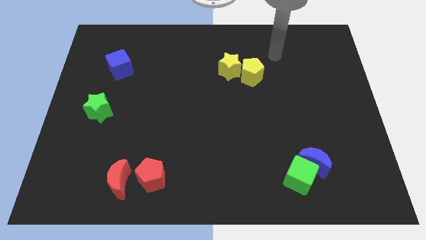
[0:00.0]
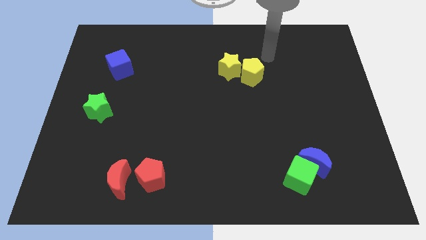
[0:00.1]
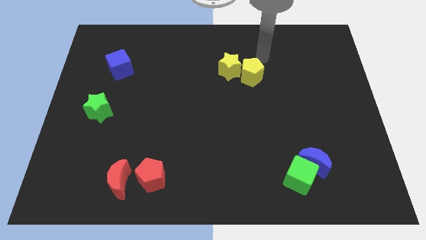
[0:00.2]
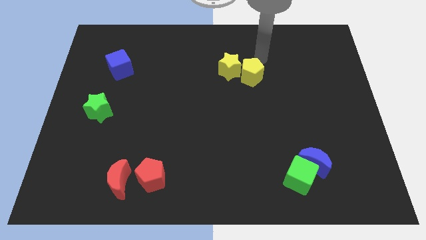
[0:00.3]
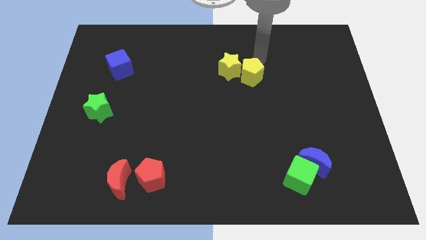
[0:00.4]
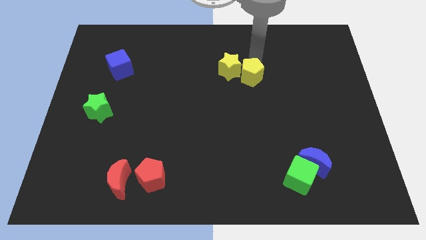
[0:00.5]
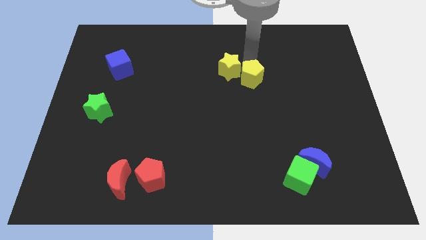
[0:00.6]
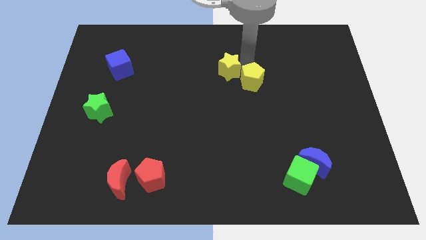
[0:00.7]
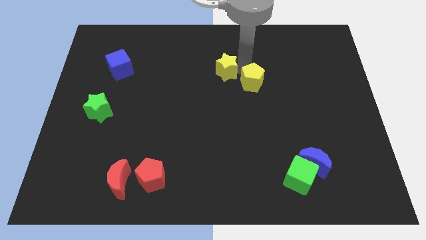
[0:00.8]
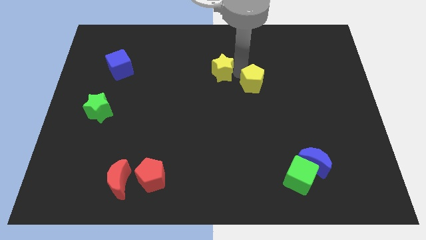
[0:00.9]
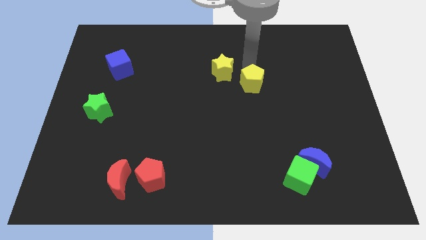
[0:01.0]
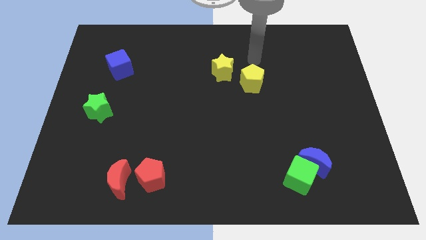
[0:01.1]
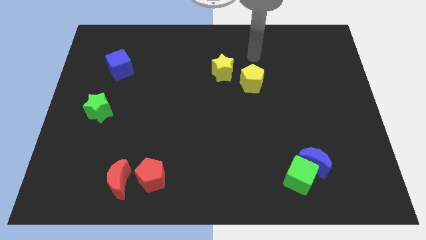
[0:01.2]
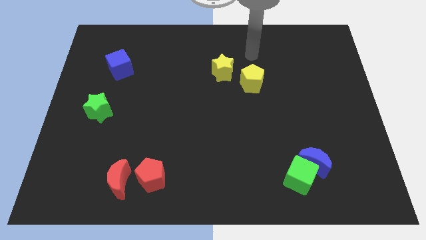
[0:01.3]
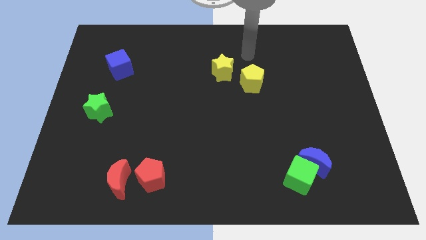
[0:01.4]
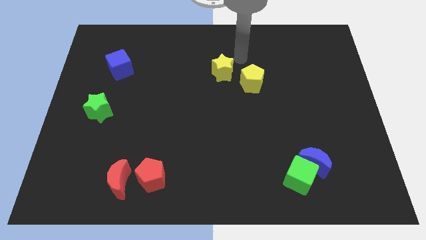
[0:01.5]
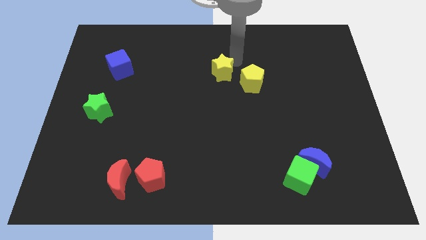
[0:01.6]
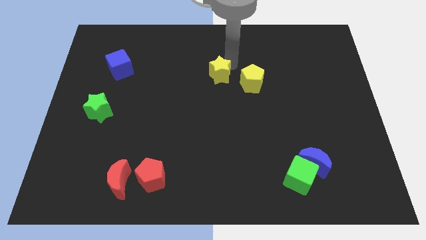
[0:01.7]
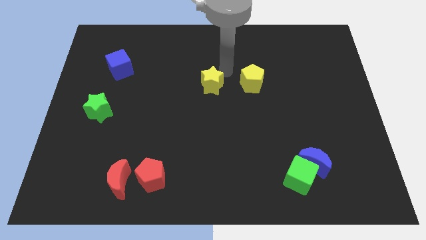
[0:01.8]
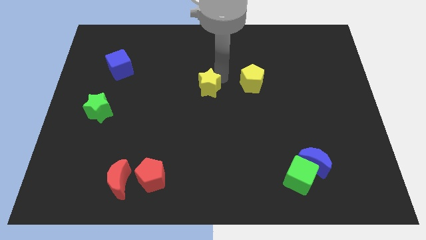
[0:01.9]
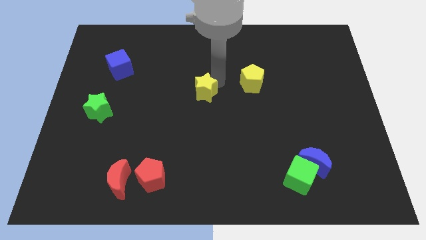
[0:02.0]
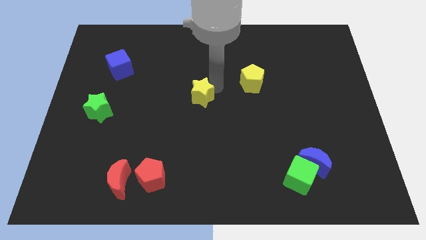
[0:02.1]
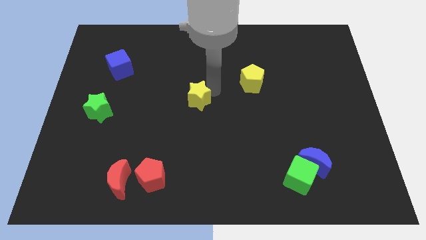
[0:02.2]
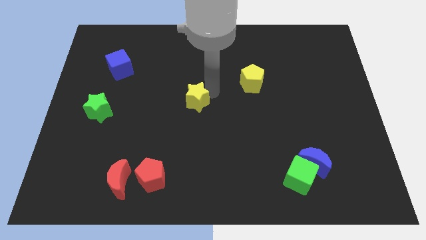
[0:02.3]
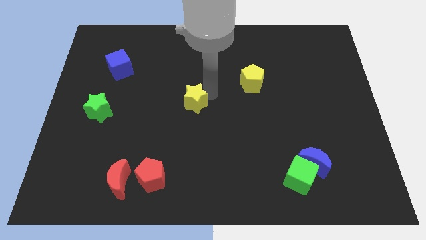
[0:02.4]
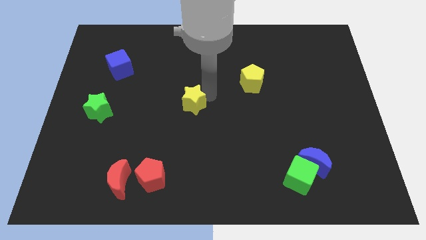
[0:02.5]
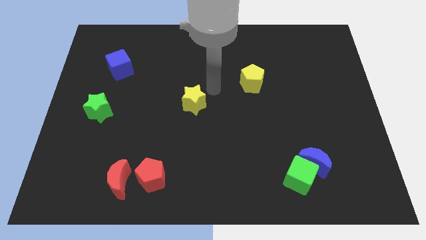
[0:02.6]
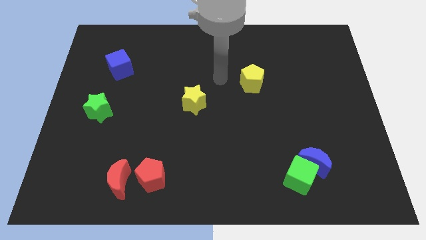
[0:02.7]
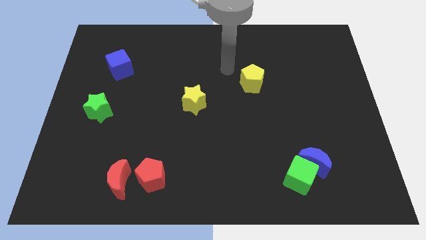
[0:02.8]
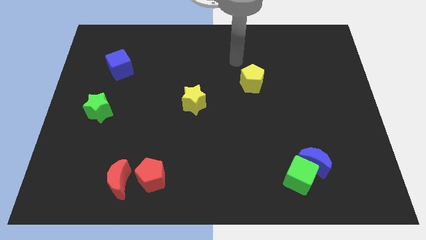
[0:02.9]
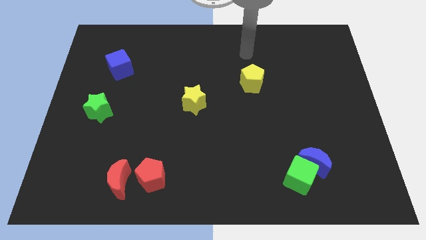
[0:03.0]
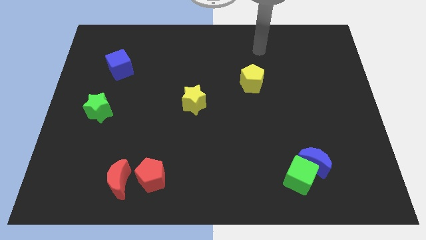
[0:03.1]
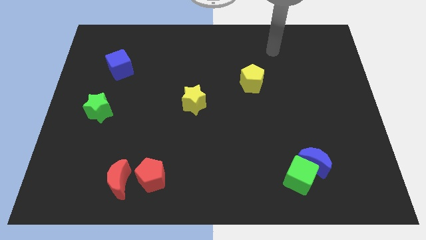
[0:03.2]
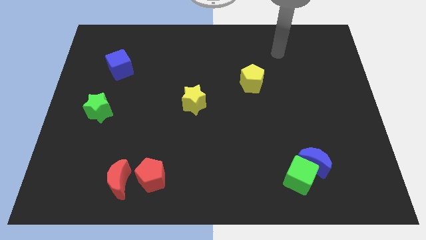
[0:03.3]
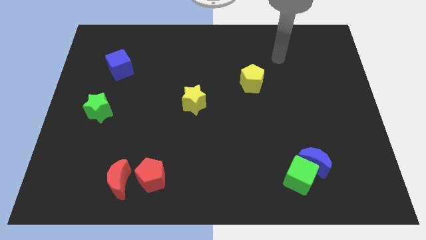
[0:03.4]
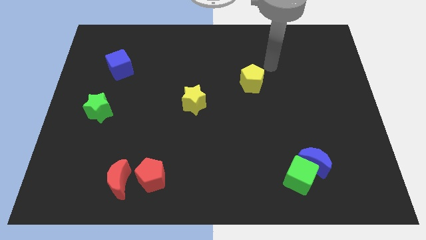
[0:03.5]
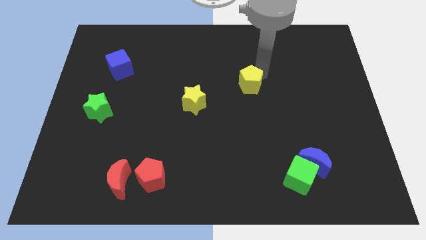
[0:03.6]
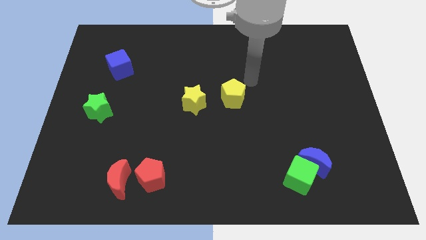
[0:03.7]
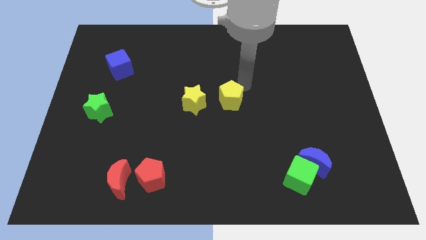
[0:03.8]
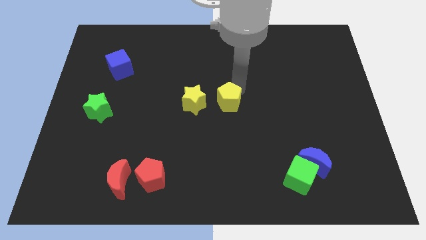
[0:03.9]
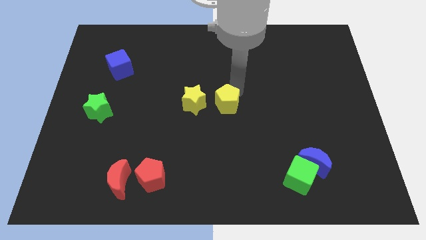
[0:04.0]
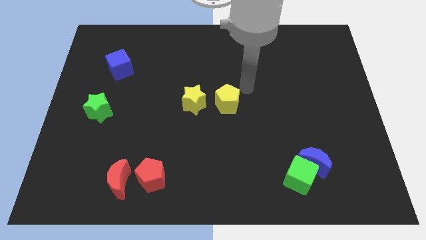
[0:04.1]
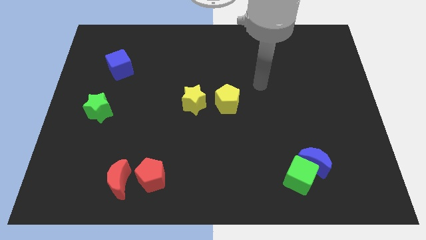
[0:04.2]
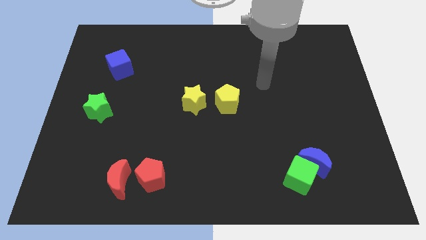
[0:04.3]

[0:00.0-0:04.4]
plush the yellow blocks to the center of the board

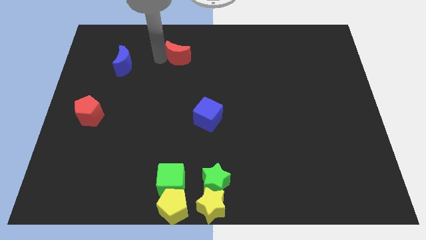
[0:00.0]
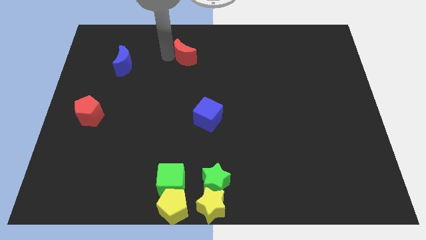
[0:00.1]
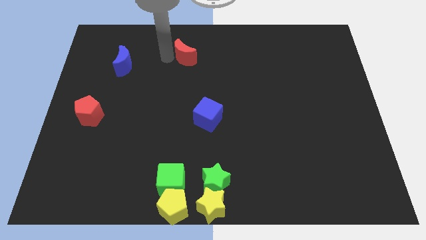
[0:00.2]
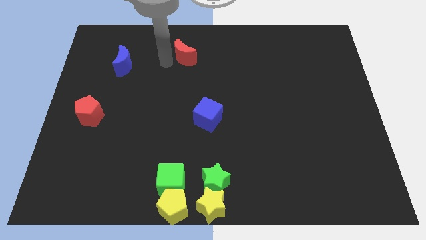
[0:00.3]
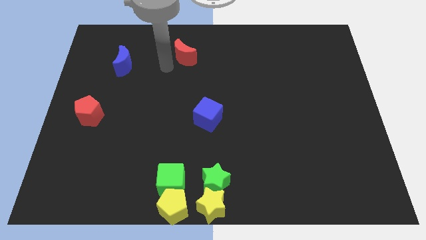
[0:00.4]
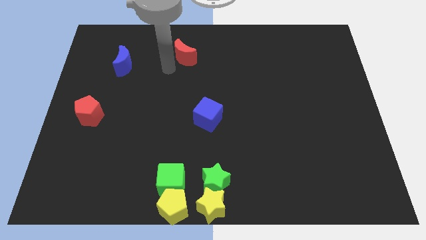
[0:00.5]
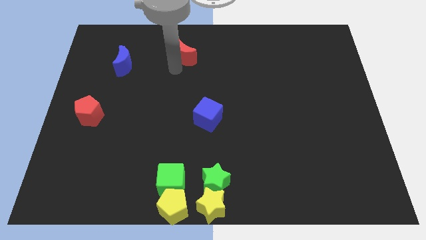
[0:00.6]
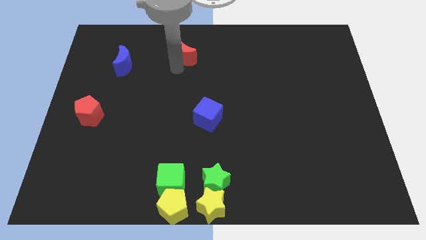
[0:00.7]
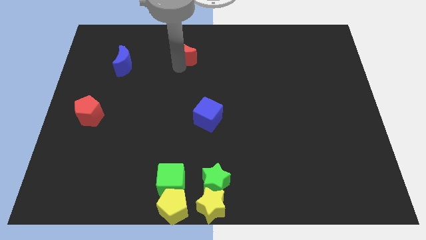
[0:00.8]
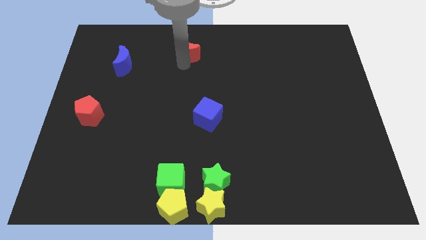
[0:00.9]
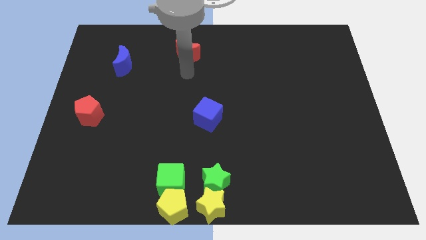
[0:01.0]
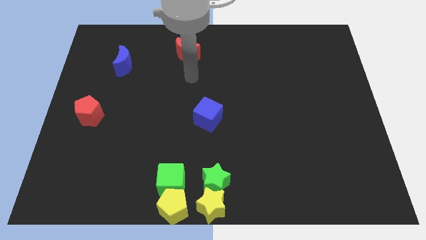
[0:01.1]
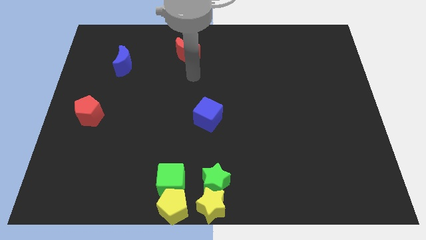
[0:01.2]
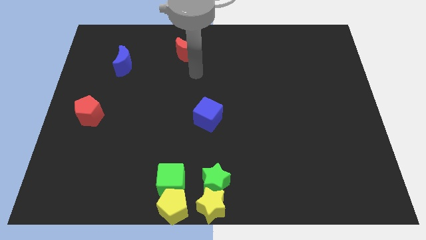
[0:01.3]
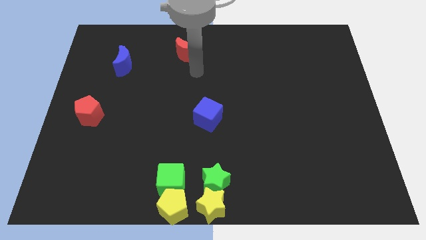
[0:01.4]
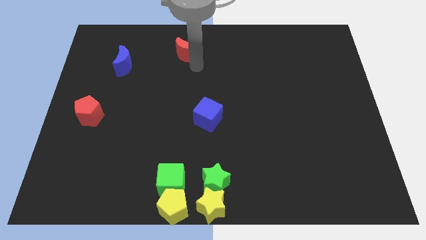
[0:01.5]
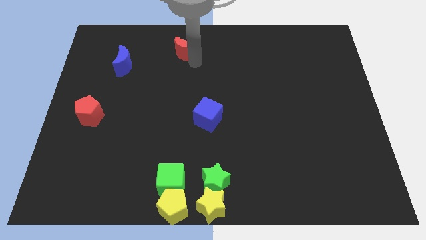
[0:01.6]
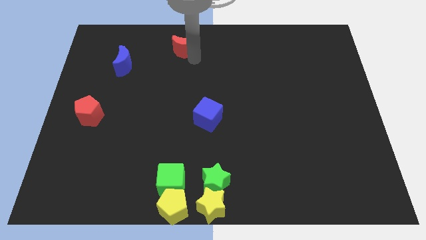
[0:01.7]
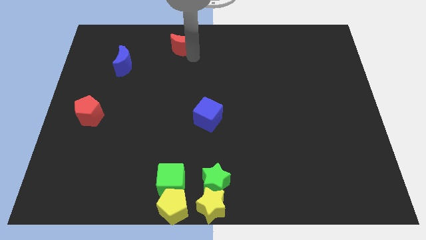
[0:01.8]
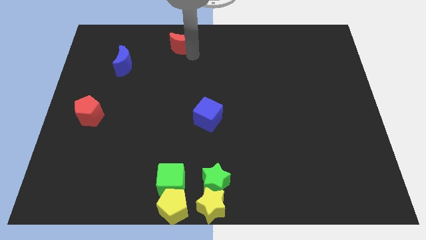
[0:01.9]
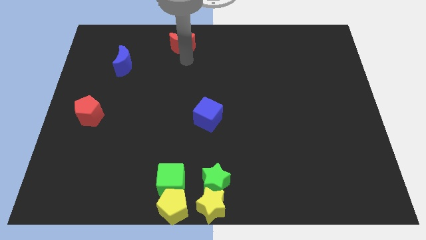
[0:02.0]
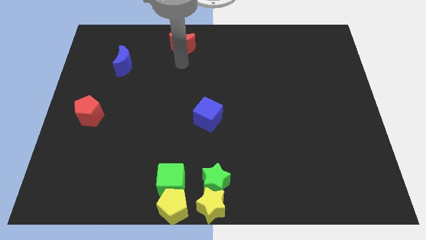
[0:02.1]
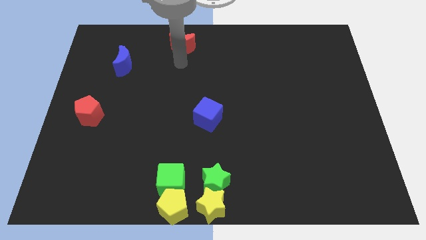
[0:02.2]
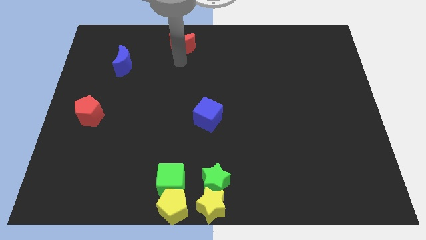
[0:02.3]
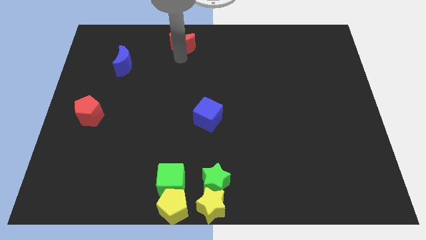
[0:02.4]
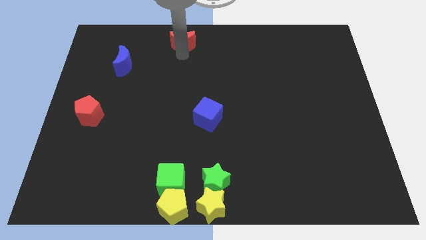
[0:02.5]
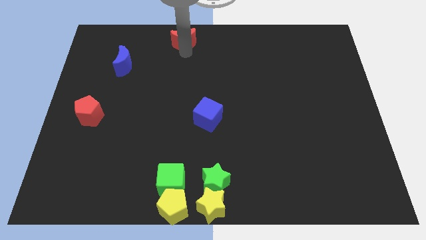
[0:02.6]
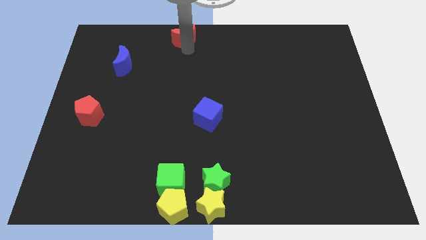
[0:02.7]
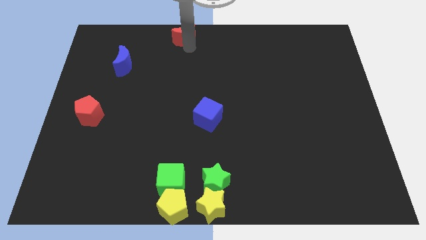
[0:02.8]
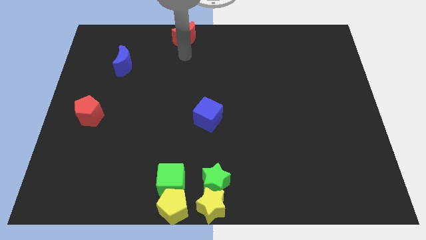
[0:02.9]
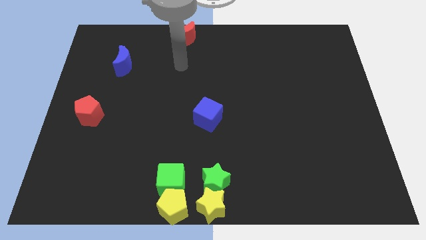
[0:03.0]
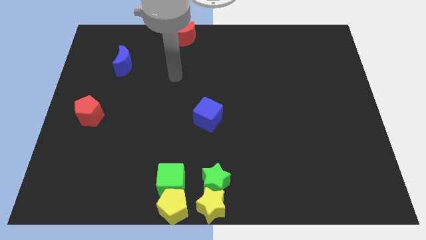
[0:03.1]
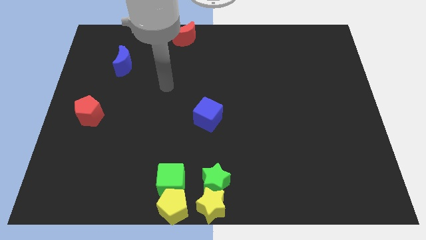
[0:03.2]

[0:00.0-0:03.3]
move red moon towards top side of the board

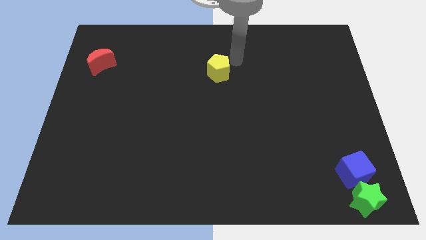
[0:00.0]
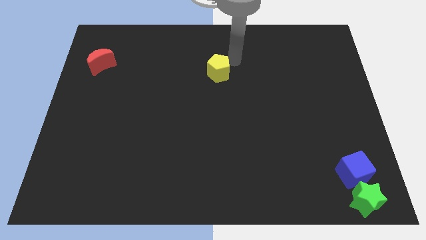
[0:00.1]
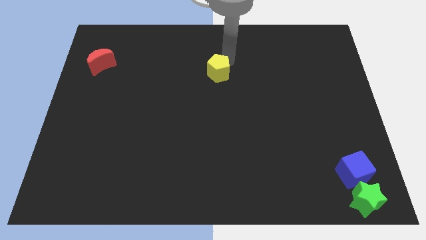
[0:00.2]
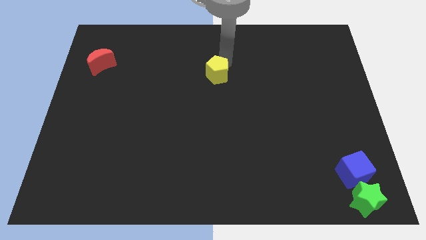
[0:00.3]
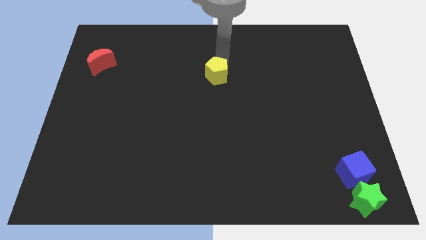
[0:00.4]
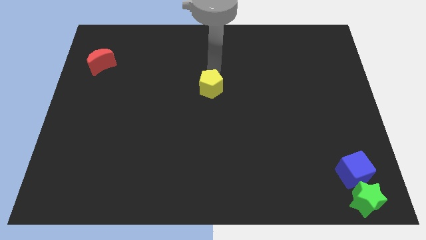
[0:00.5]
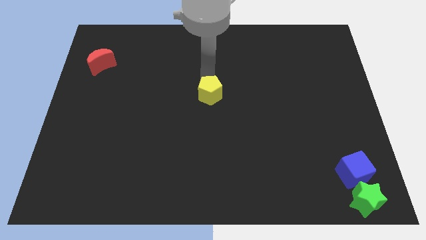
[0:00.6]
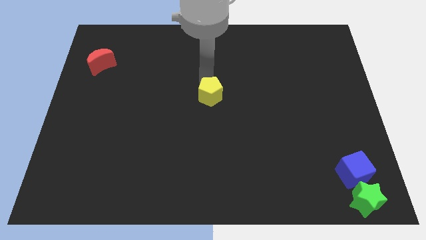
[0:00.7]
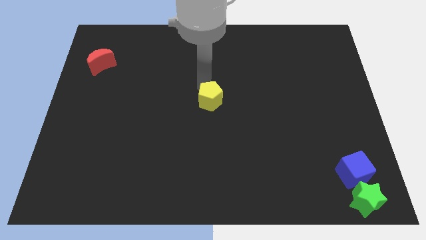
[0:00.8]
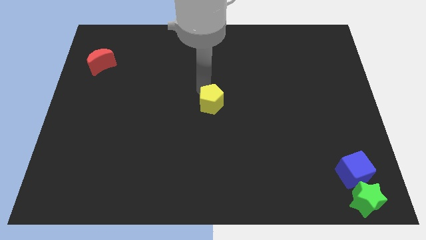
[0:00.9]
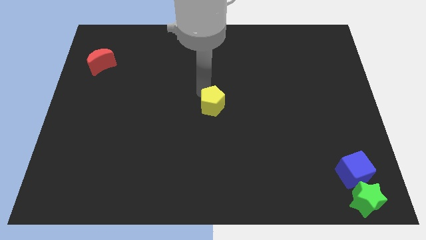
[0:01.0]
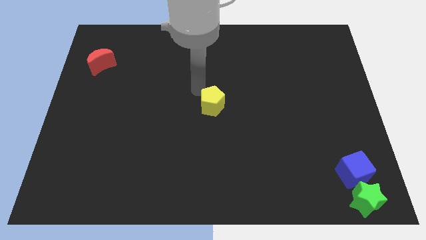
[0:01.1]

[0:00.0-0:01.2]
push the yellow pentagon towards the bottom side of the board
